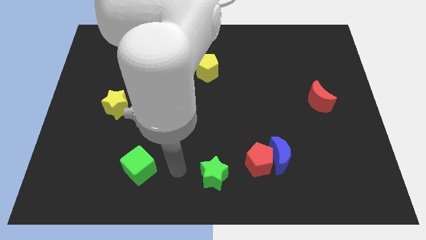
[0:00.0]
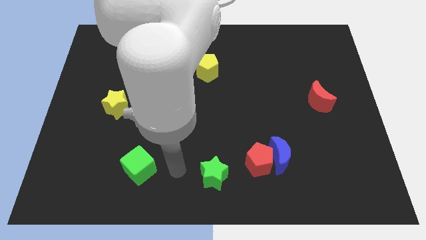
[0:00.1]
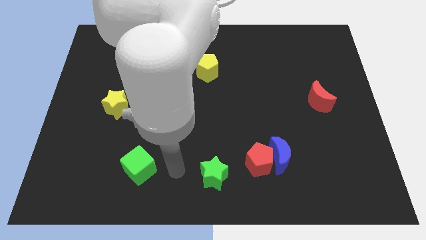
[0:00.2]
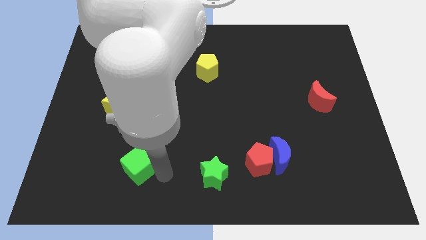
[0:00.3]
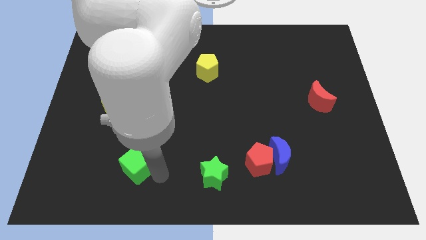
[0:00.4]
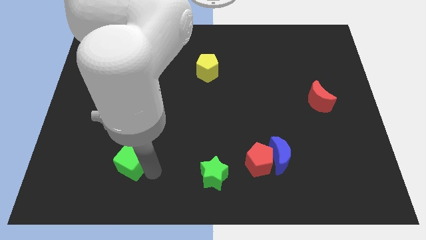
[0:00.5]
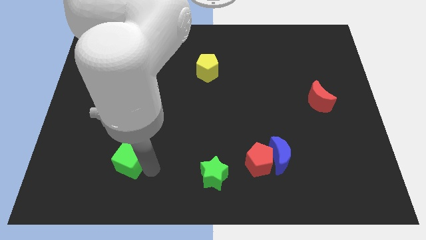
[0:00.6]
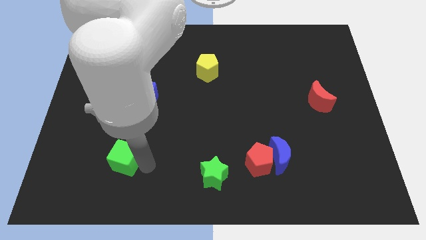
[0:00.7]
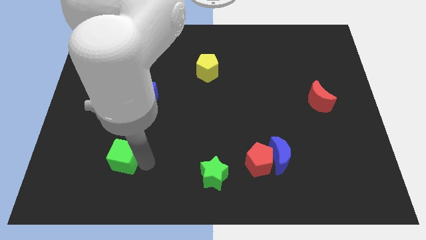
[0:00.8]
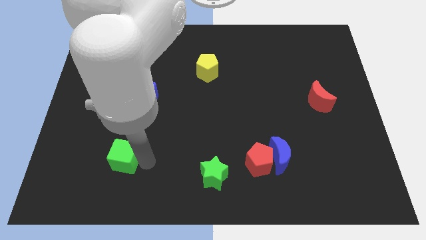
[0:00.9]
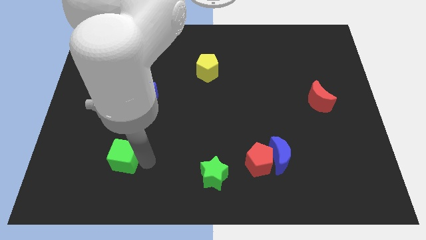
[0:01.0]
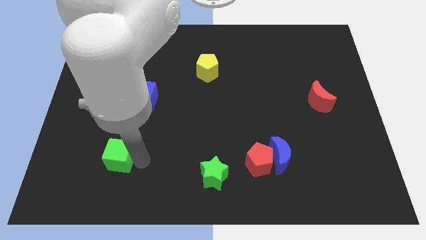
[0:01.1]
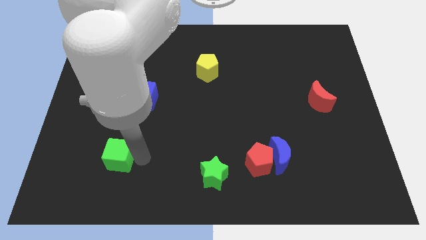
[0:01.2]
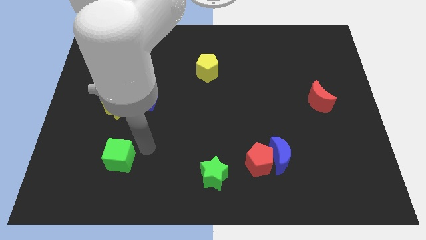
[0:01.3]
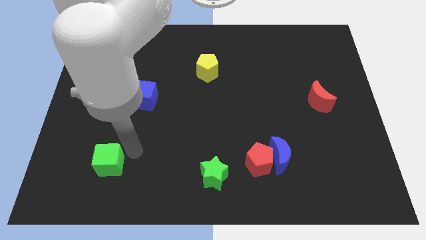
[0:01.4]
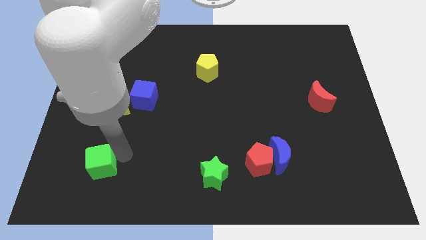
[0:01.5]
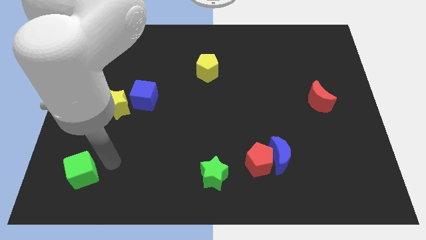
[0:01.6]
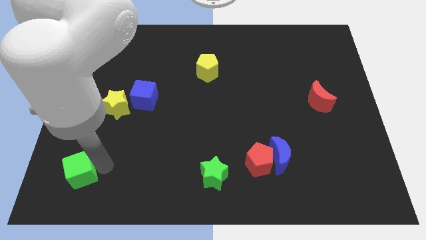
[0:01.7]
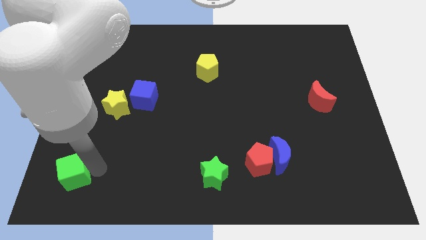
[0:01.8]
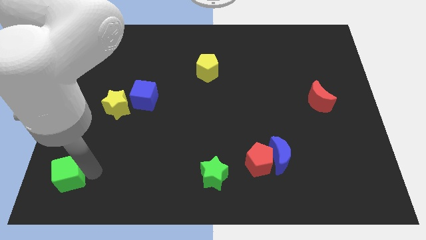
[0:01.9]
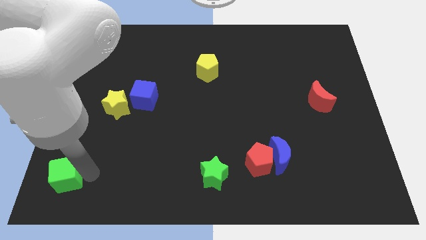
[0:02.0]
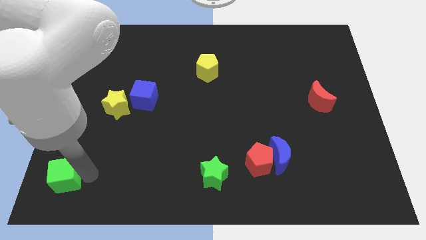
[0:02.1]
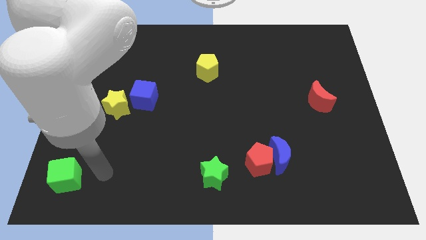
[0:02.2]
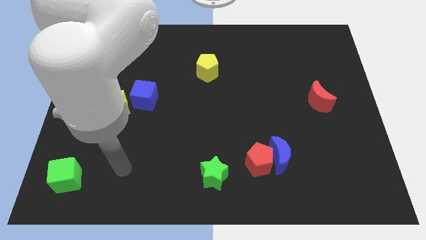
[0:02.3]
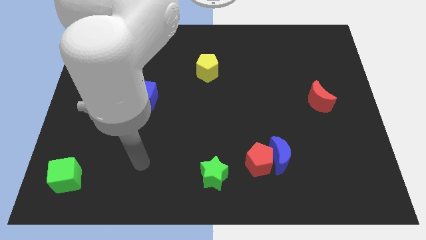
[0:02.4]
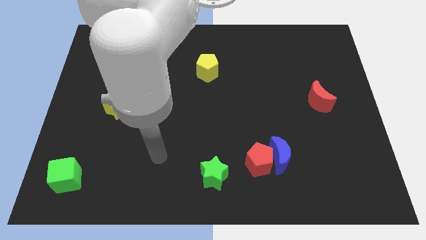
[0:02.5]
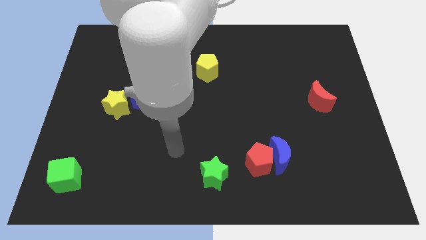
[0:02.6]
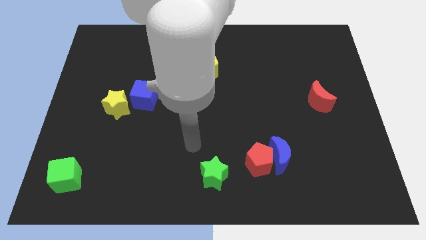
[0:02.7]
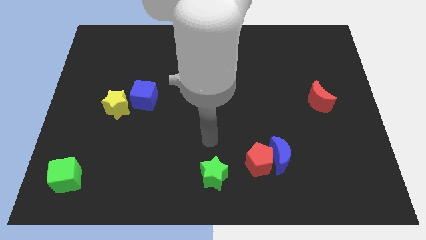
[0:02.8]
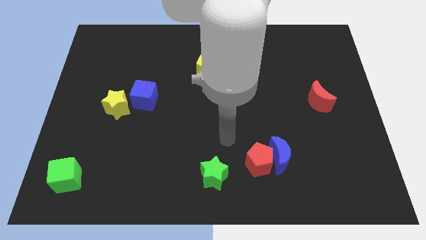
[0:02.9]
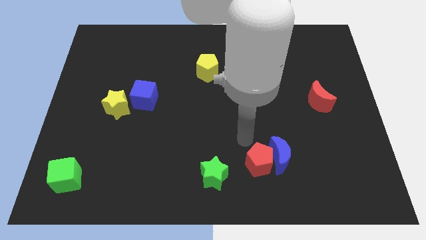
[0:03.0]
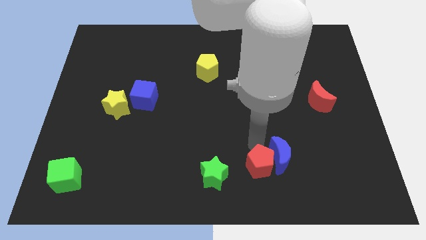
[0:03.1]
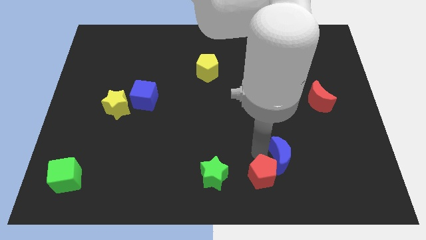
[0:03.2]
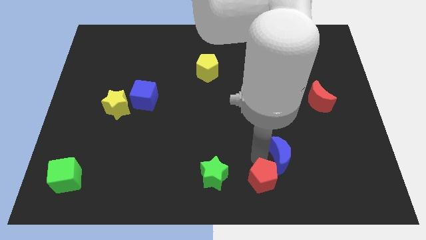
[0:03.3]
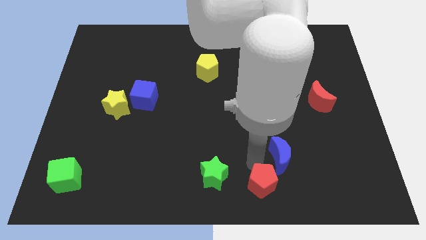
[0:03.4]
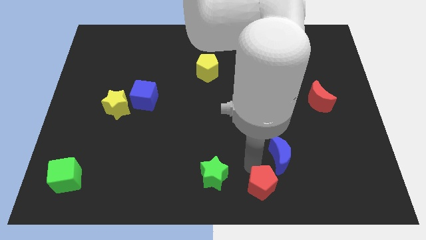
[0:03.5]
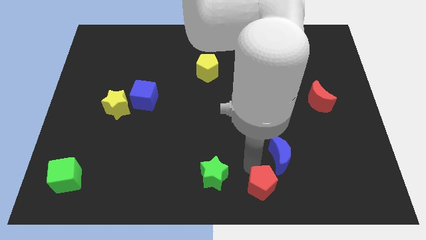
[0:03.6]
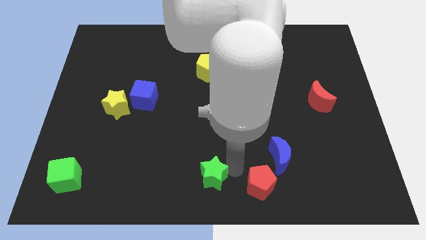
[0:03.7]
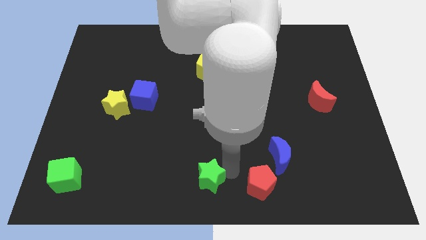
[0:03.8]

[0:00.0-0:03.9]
place the green cube at the bottom left

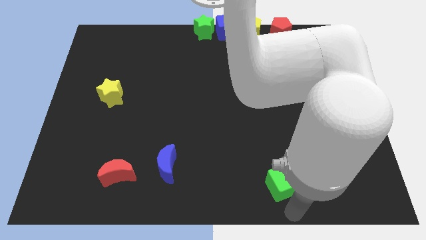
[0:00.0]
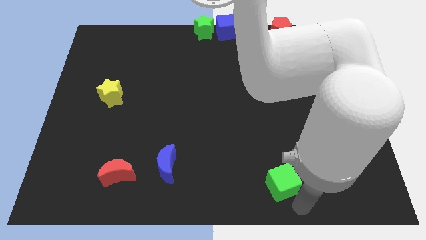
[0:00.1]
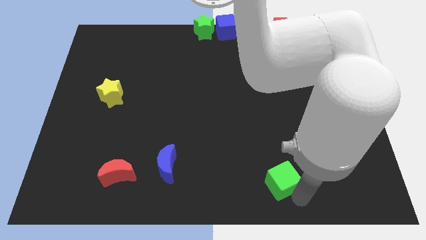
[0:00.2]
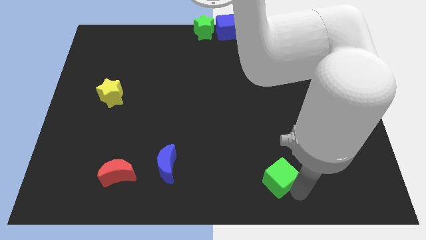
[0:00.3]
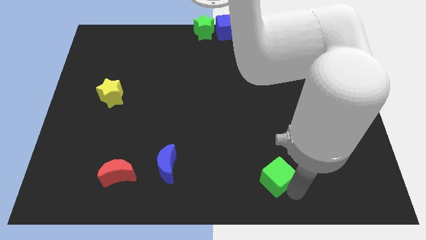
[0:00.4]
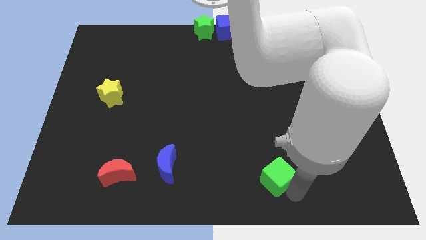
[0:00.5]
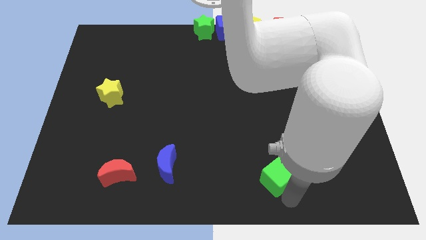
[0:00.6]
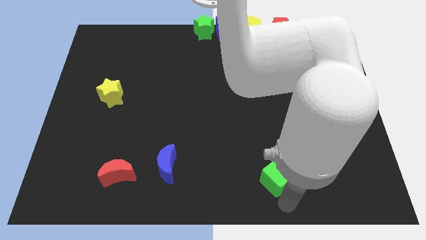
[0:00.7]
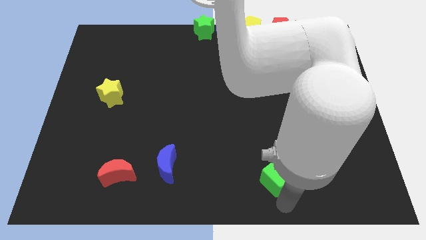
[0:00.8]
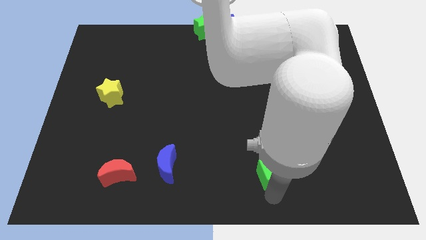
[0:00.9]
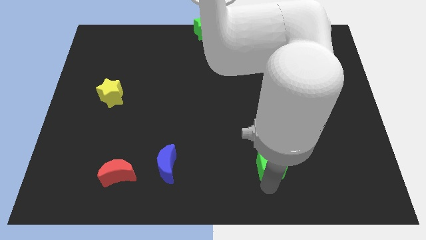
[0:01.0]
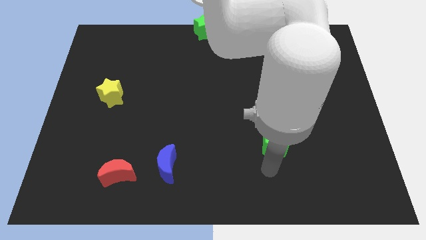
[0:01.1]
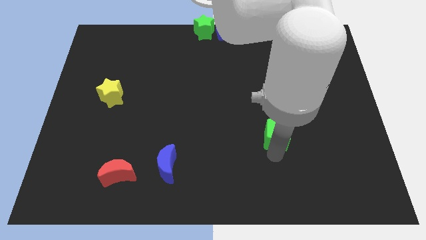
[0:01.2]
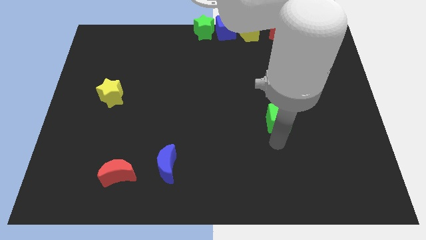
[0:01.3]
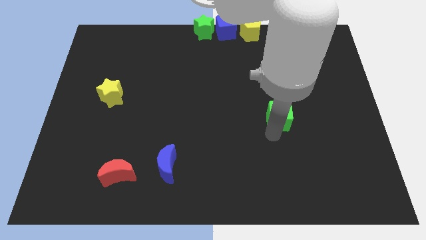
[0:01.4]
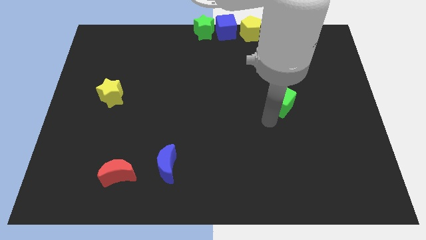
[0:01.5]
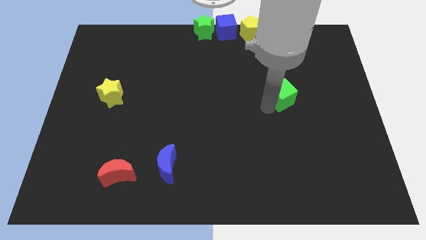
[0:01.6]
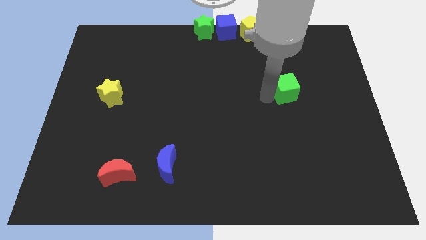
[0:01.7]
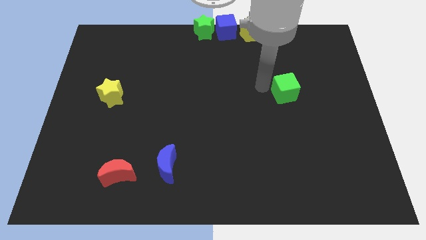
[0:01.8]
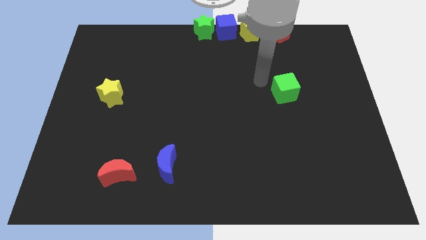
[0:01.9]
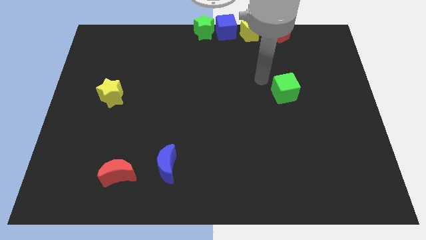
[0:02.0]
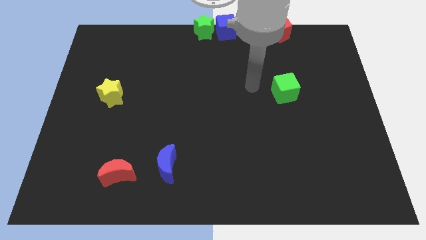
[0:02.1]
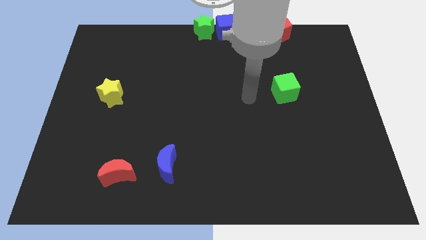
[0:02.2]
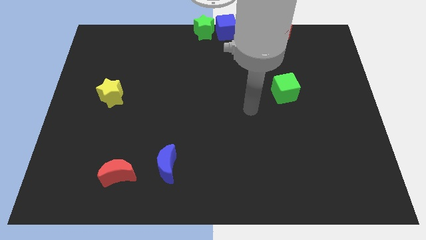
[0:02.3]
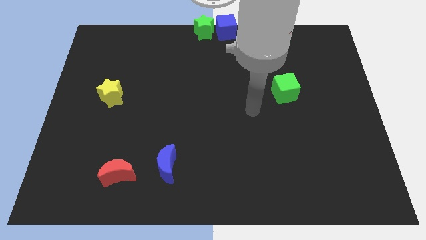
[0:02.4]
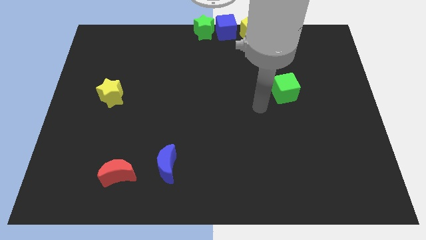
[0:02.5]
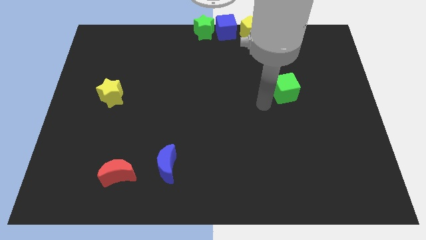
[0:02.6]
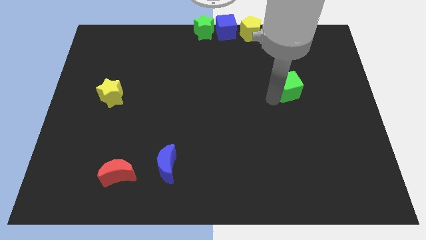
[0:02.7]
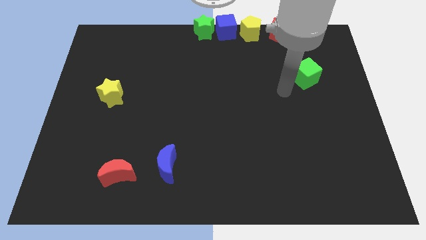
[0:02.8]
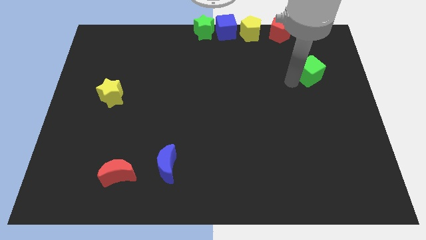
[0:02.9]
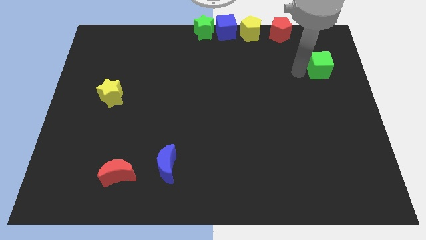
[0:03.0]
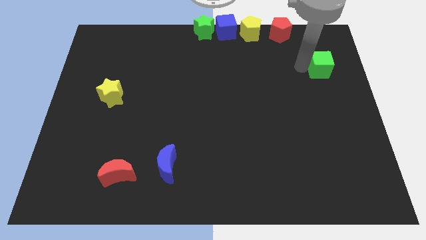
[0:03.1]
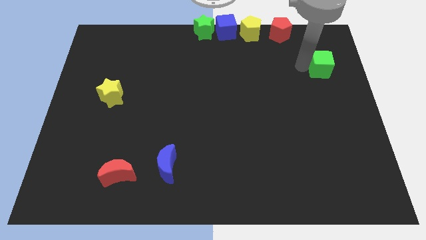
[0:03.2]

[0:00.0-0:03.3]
push green cube towards top right corner

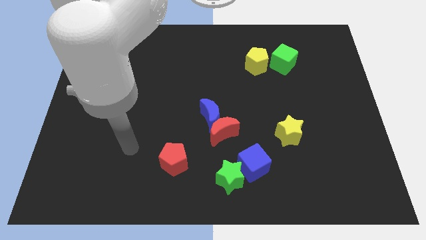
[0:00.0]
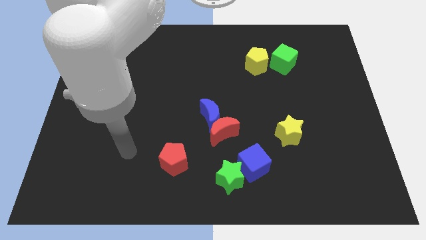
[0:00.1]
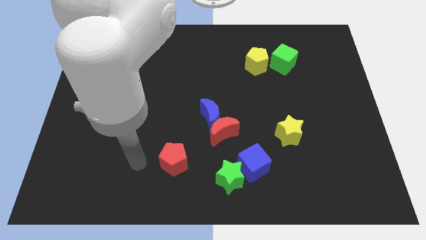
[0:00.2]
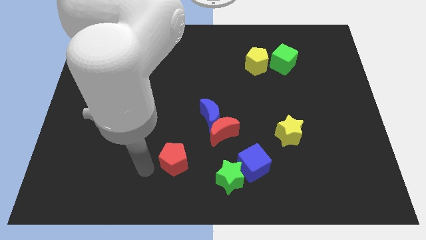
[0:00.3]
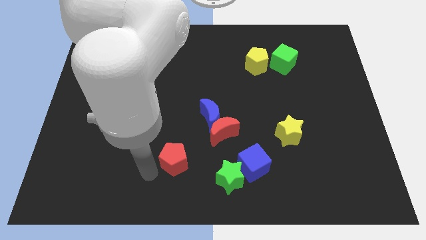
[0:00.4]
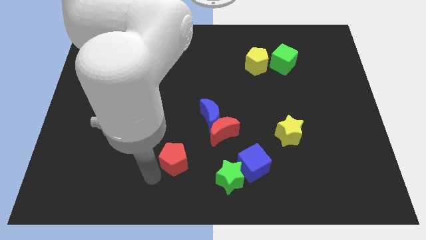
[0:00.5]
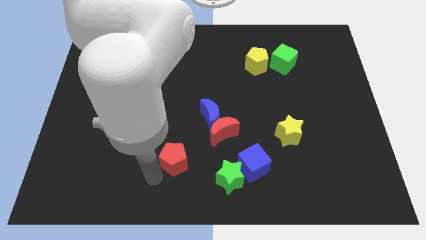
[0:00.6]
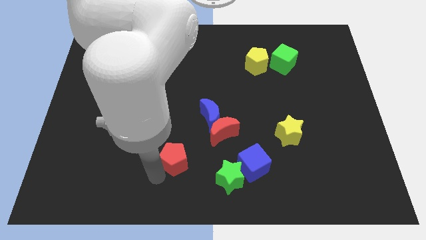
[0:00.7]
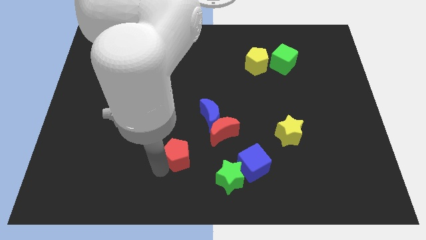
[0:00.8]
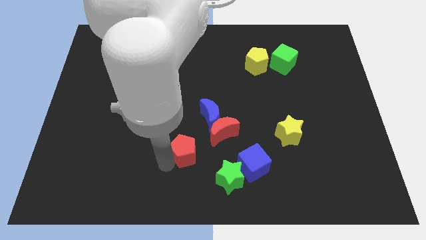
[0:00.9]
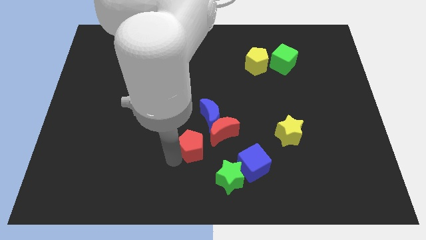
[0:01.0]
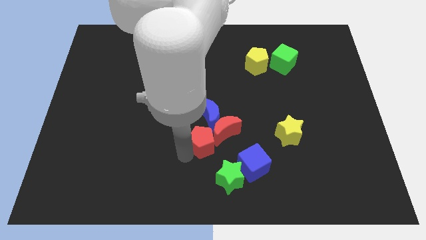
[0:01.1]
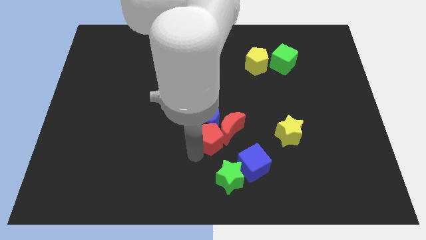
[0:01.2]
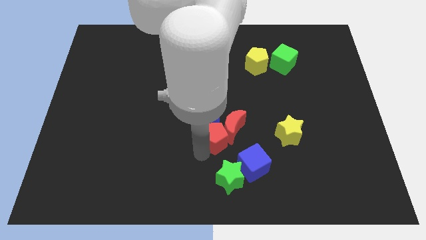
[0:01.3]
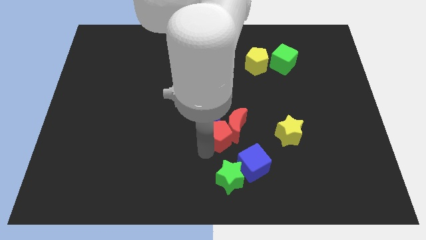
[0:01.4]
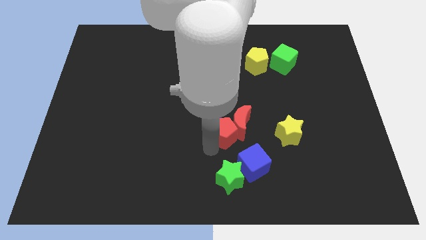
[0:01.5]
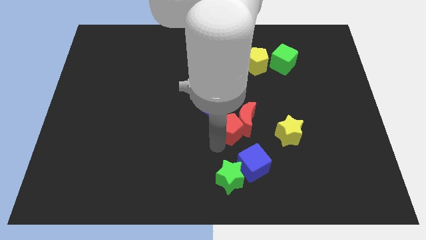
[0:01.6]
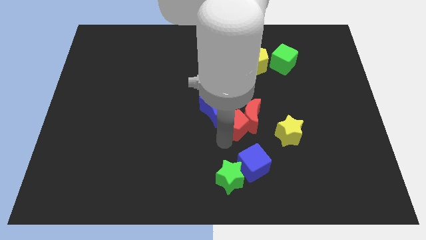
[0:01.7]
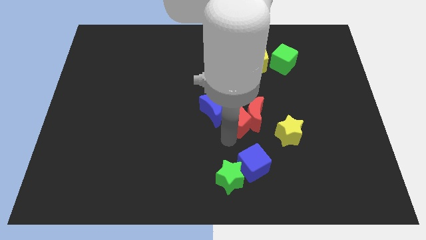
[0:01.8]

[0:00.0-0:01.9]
push the red pentagon into the red moon
